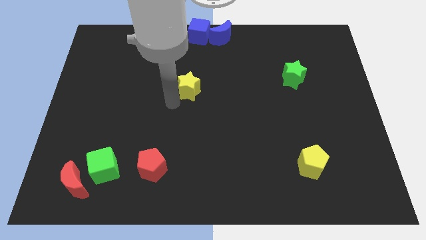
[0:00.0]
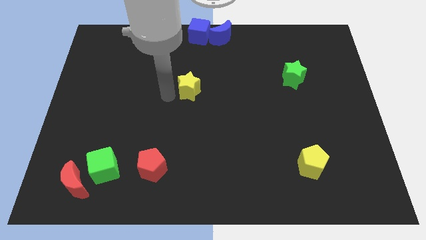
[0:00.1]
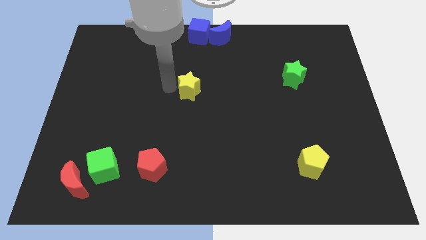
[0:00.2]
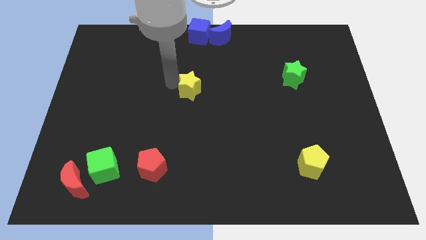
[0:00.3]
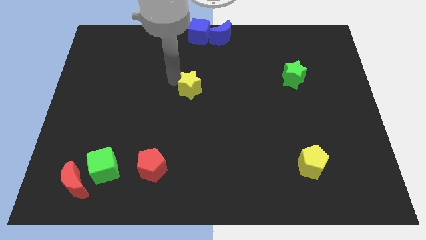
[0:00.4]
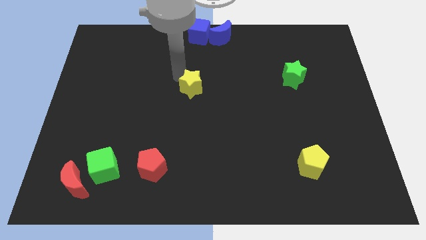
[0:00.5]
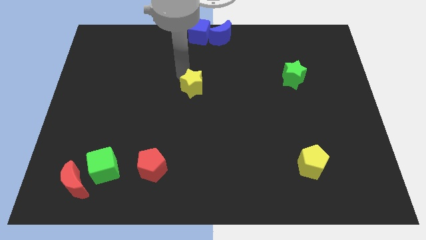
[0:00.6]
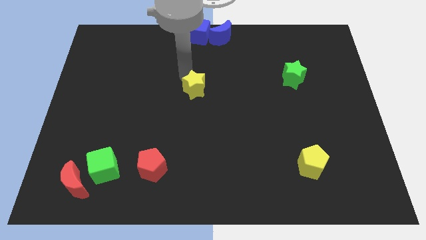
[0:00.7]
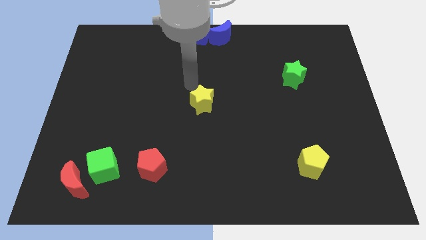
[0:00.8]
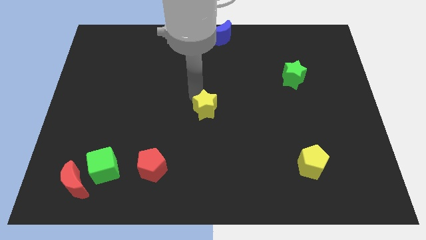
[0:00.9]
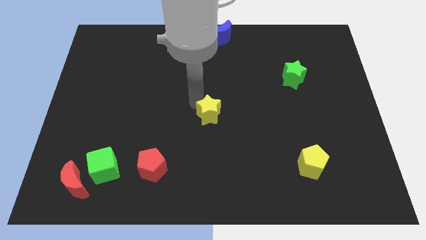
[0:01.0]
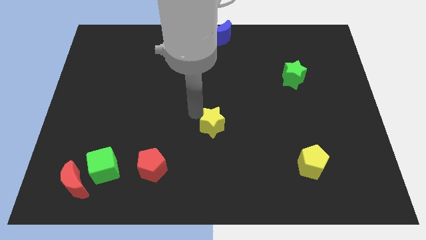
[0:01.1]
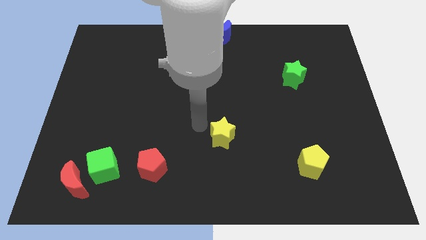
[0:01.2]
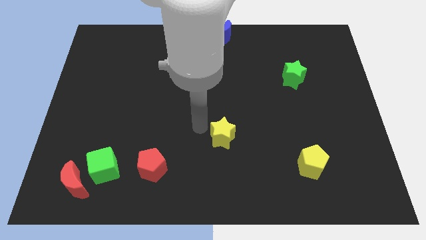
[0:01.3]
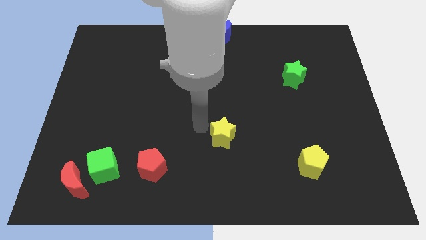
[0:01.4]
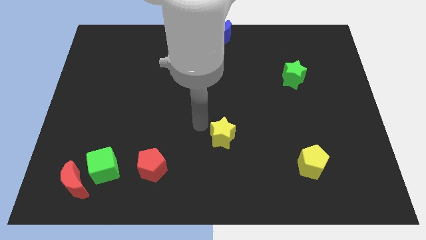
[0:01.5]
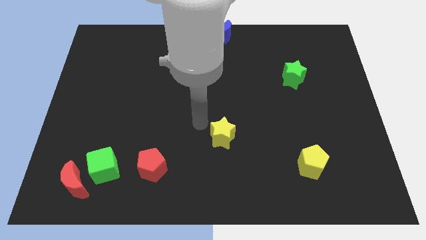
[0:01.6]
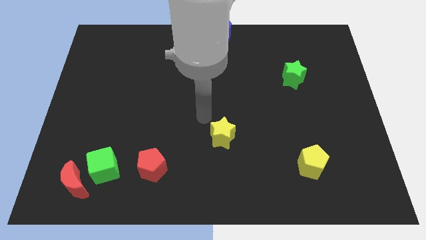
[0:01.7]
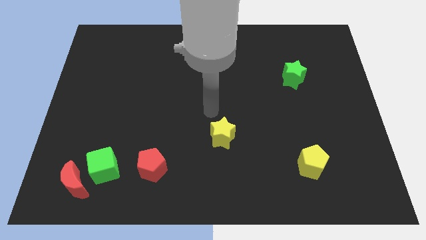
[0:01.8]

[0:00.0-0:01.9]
push the yellow star to the bottom center

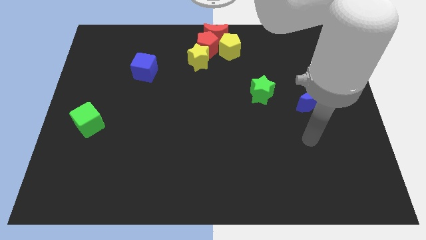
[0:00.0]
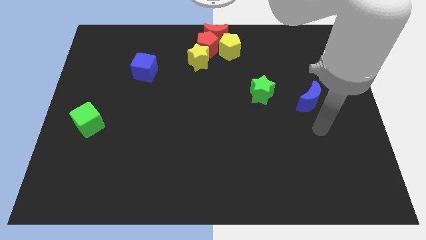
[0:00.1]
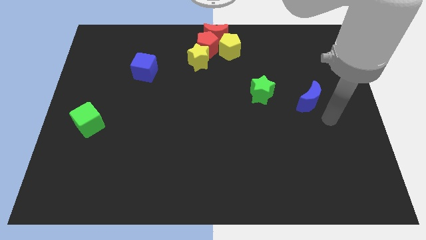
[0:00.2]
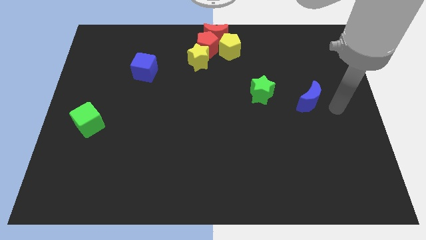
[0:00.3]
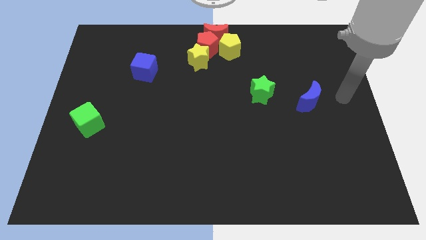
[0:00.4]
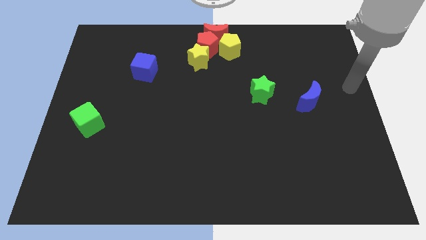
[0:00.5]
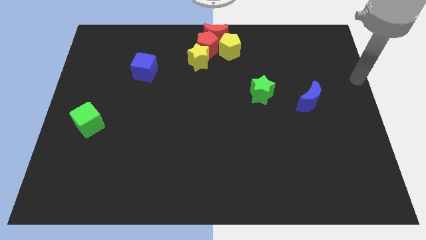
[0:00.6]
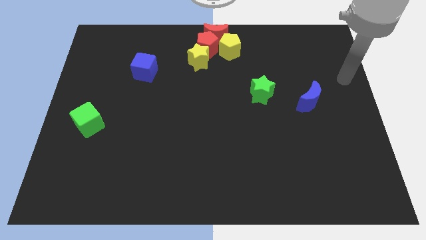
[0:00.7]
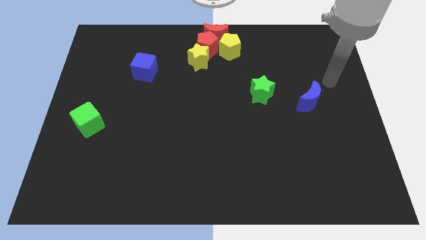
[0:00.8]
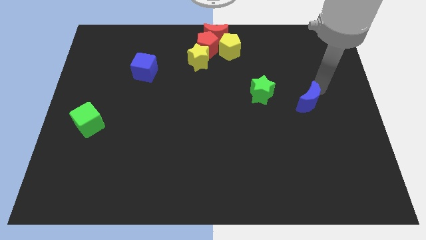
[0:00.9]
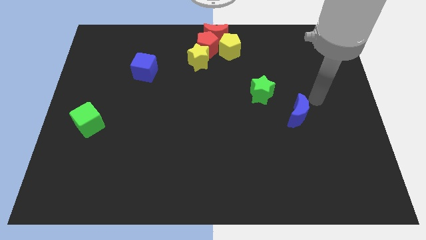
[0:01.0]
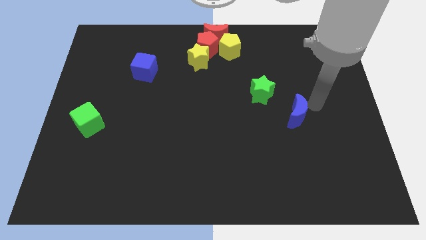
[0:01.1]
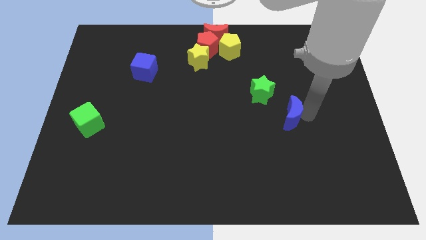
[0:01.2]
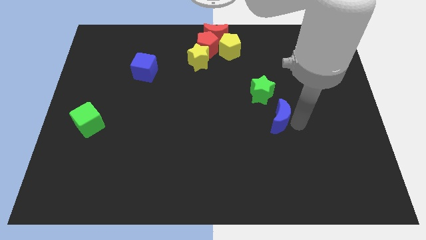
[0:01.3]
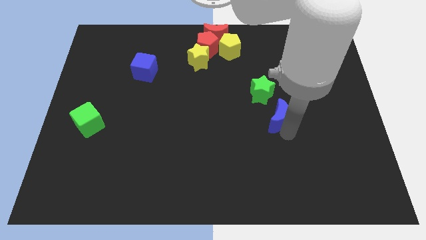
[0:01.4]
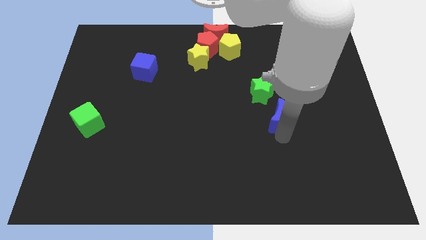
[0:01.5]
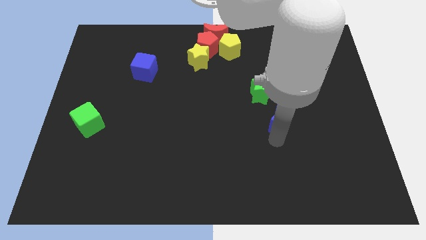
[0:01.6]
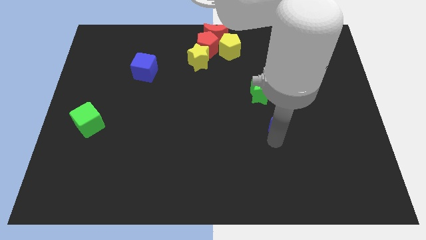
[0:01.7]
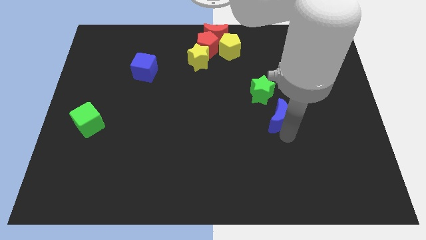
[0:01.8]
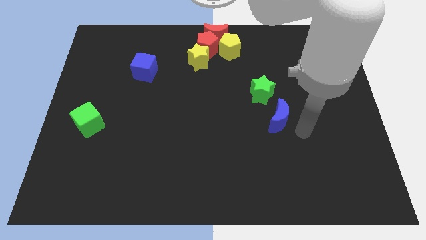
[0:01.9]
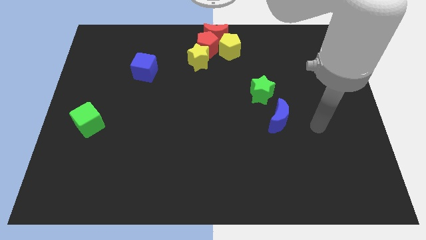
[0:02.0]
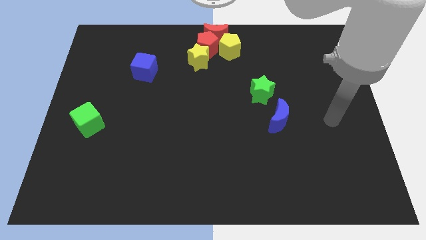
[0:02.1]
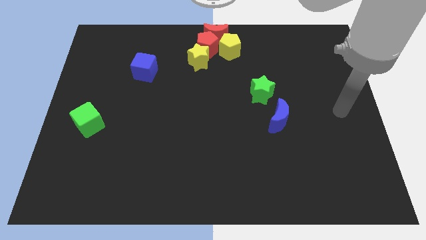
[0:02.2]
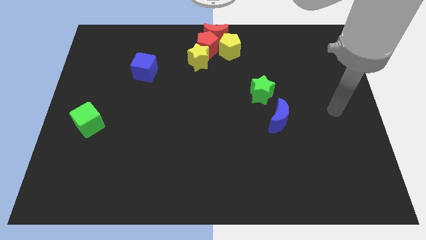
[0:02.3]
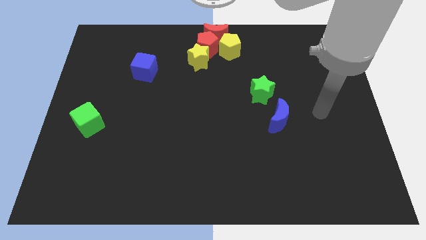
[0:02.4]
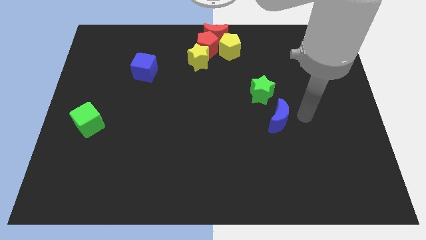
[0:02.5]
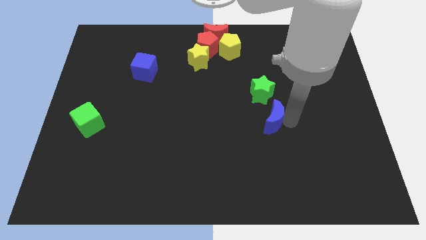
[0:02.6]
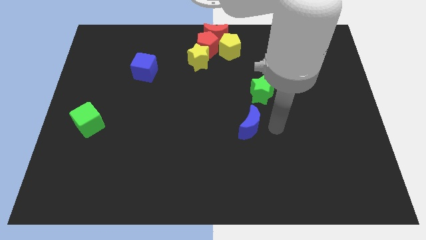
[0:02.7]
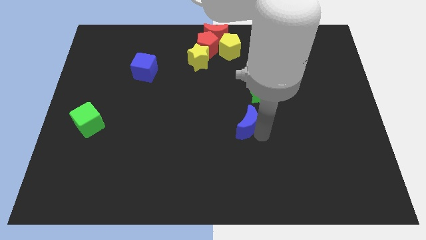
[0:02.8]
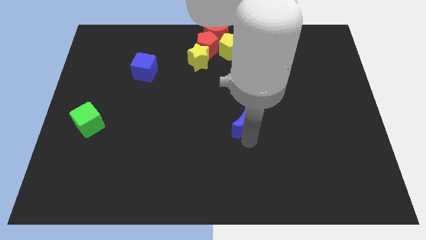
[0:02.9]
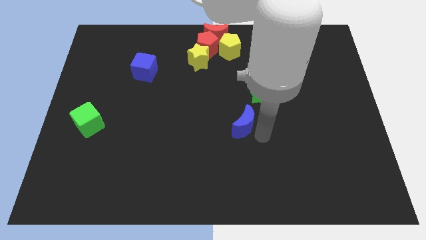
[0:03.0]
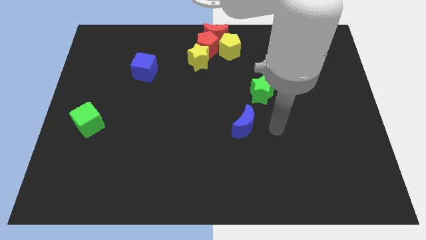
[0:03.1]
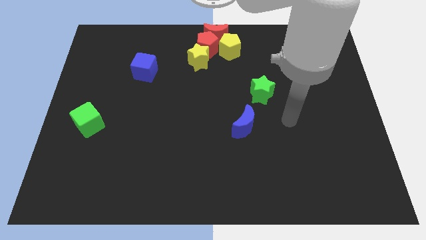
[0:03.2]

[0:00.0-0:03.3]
push the blue crescent towards the center of the board

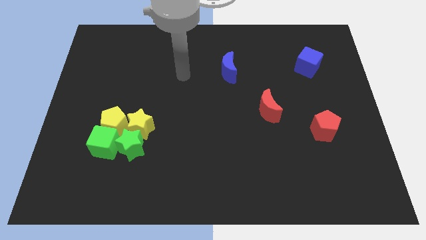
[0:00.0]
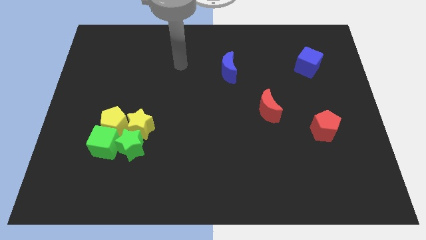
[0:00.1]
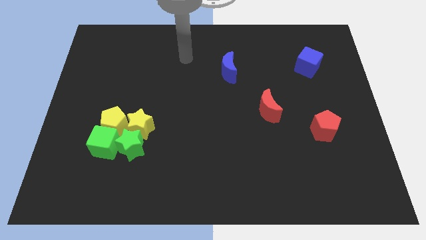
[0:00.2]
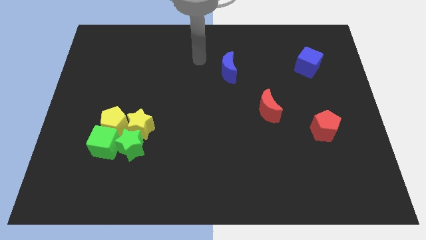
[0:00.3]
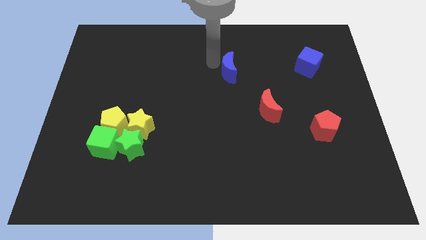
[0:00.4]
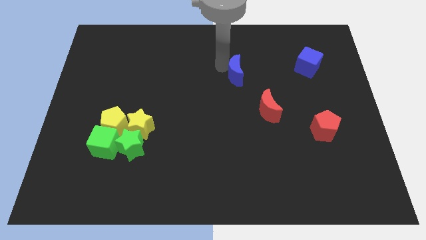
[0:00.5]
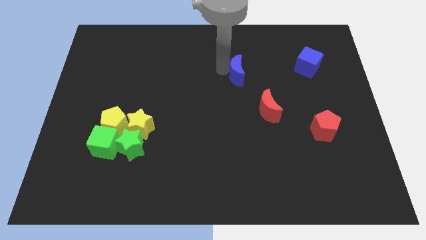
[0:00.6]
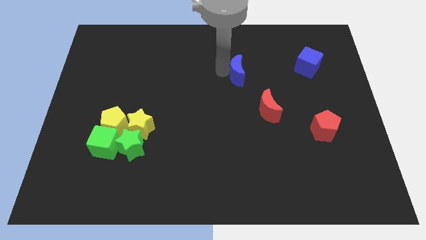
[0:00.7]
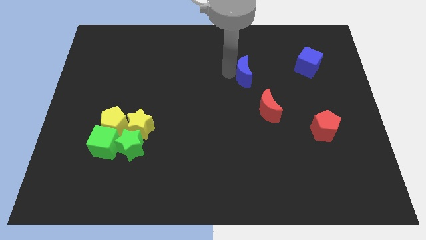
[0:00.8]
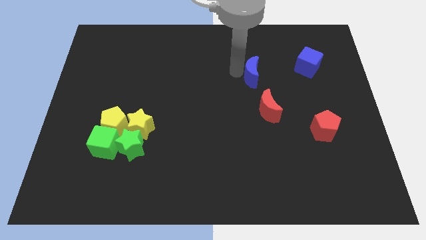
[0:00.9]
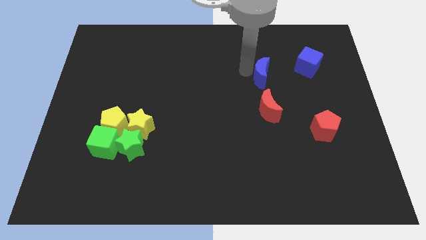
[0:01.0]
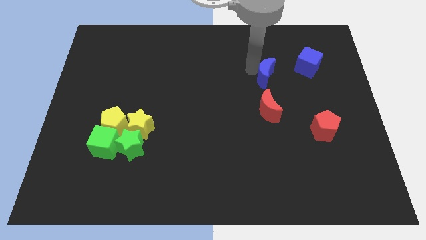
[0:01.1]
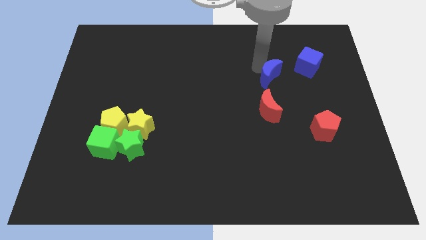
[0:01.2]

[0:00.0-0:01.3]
move the blue moon above the red moon

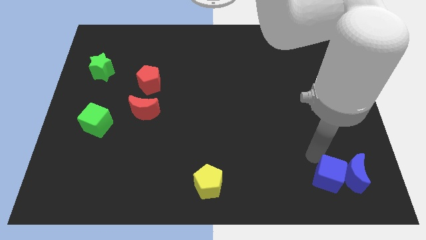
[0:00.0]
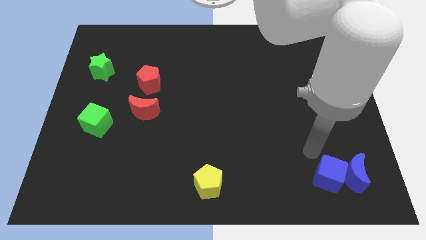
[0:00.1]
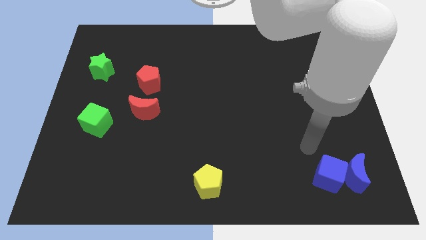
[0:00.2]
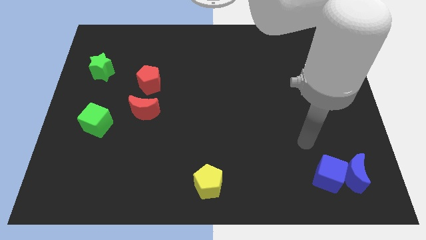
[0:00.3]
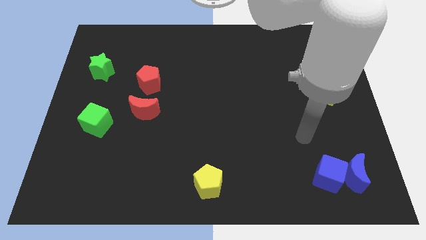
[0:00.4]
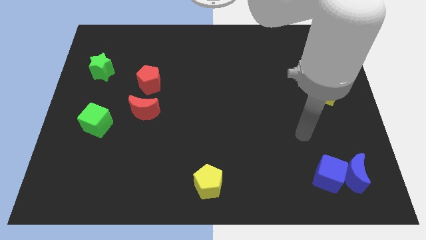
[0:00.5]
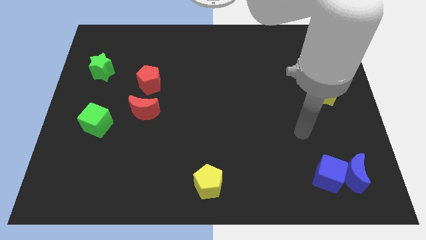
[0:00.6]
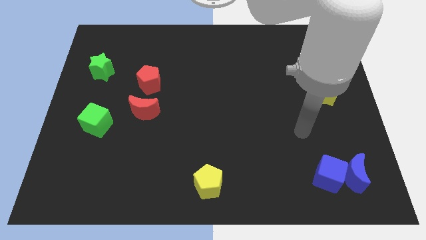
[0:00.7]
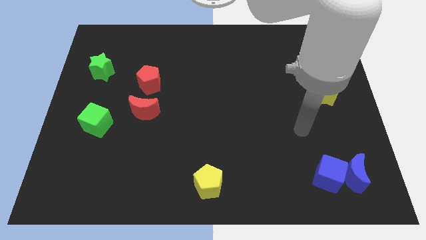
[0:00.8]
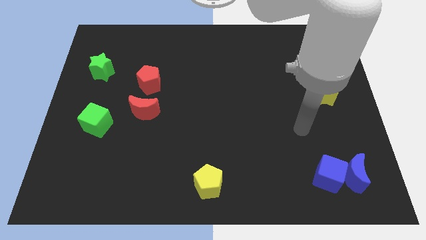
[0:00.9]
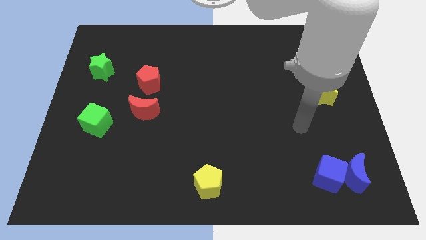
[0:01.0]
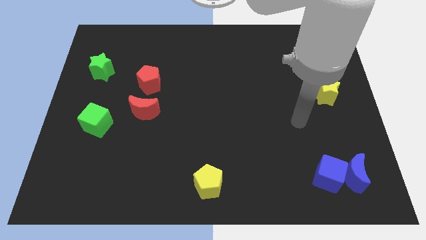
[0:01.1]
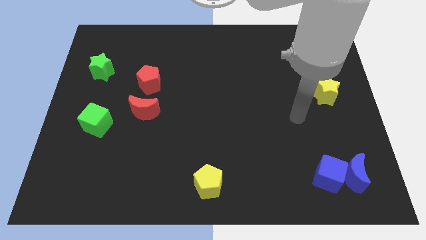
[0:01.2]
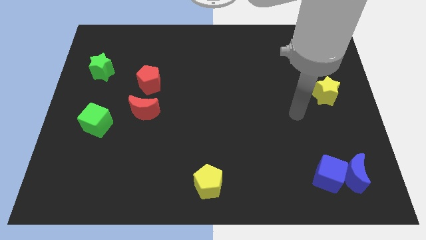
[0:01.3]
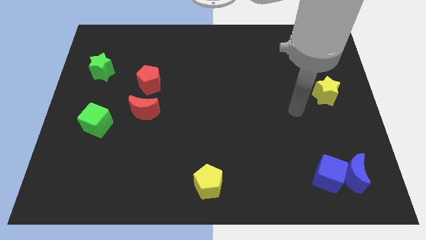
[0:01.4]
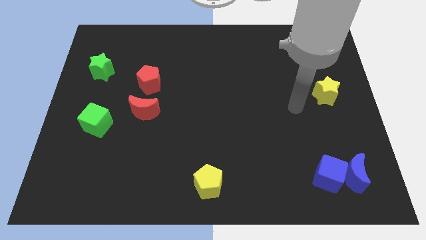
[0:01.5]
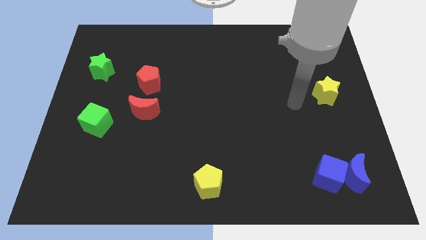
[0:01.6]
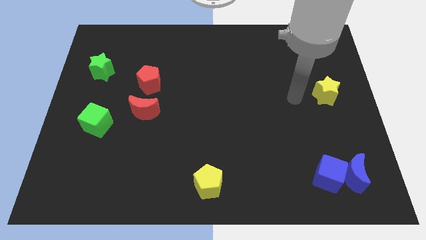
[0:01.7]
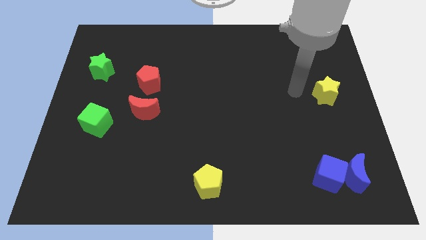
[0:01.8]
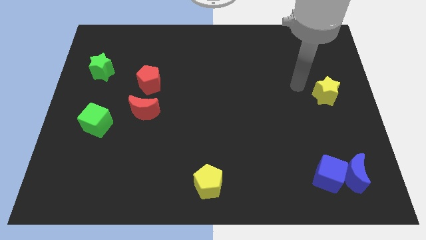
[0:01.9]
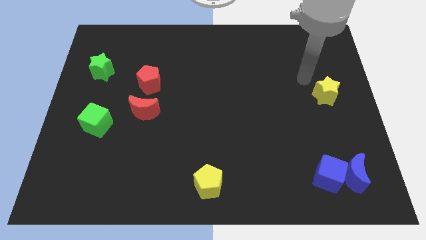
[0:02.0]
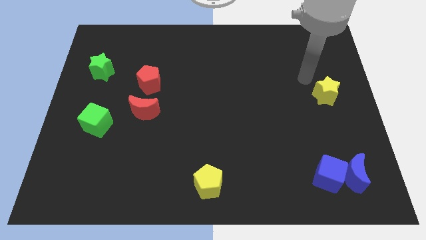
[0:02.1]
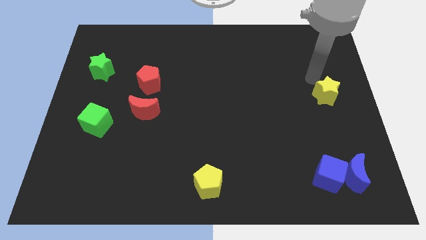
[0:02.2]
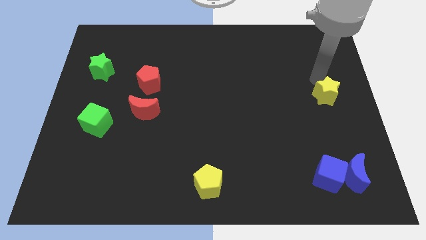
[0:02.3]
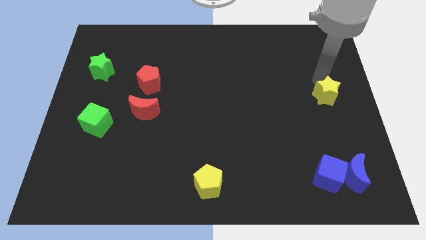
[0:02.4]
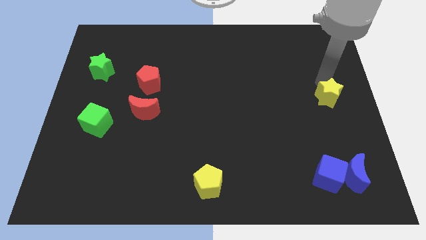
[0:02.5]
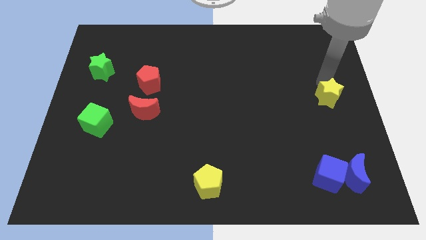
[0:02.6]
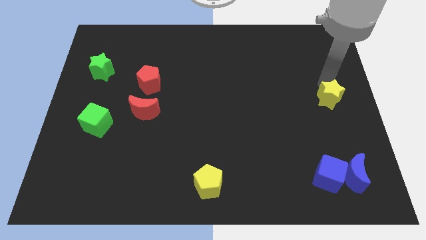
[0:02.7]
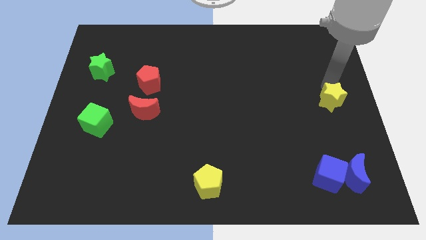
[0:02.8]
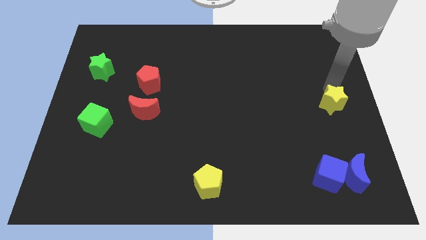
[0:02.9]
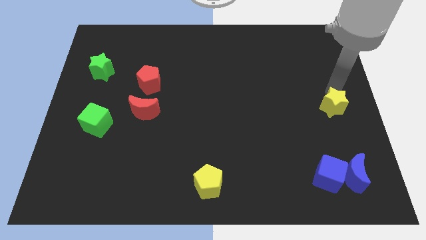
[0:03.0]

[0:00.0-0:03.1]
point your arm above yellow star
